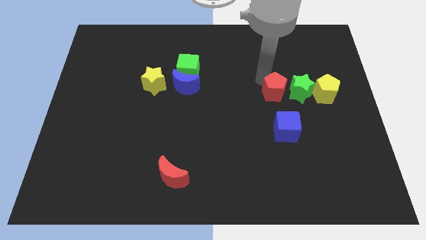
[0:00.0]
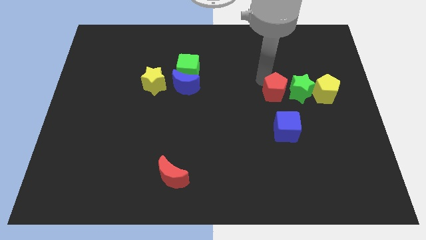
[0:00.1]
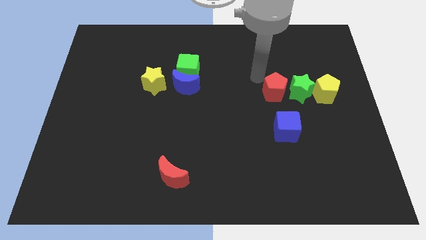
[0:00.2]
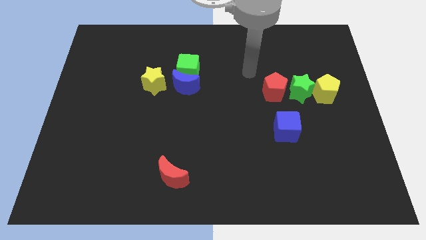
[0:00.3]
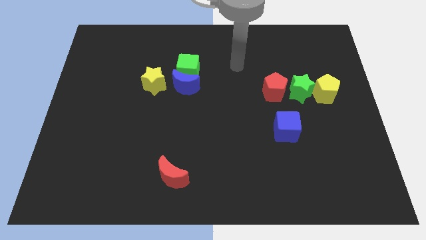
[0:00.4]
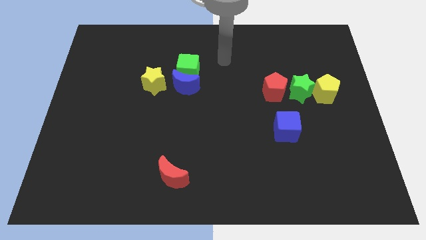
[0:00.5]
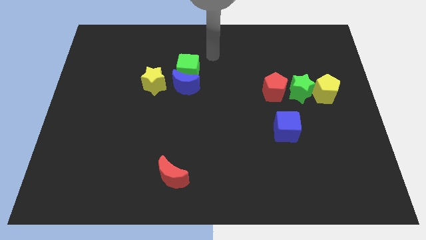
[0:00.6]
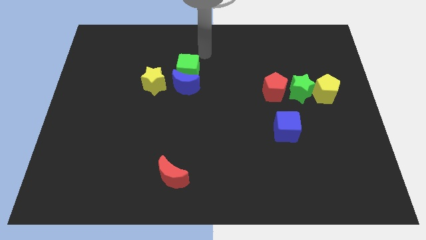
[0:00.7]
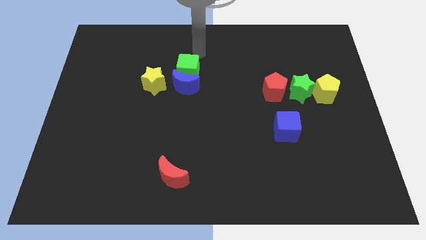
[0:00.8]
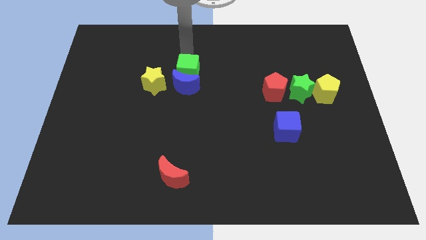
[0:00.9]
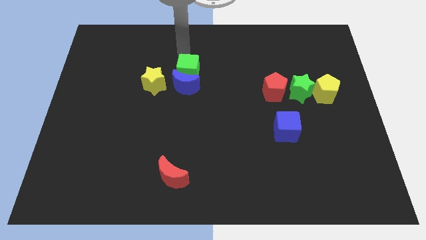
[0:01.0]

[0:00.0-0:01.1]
place arm above green cube

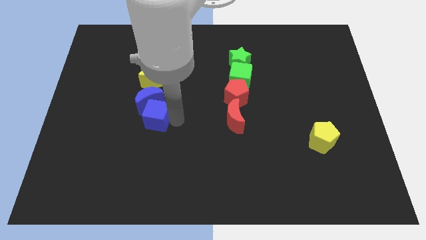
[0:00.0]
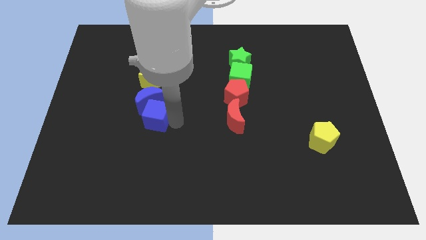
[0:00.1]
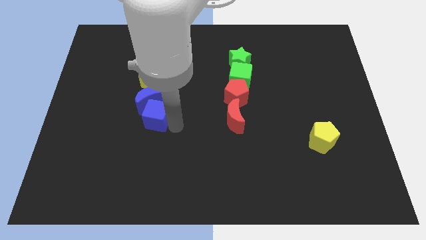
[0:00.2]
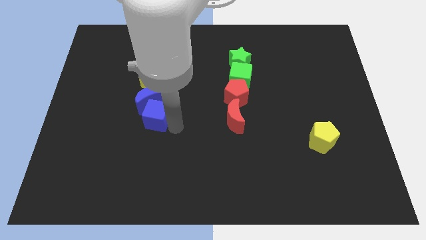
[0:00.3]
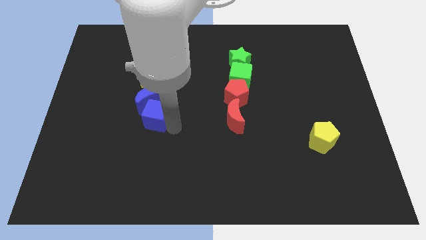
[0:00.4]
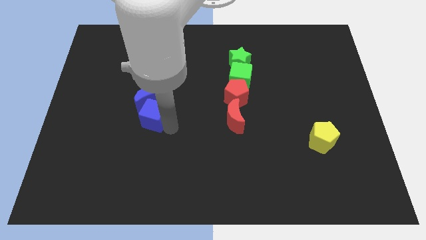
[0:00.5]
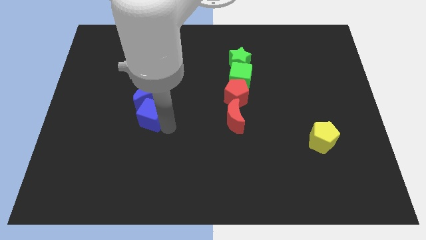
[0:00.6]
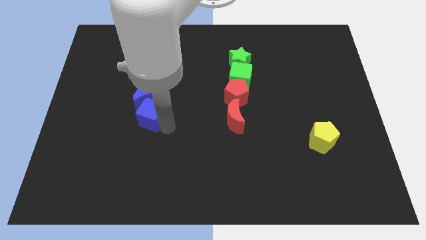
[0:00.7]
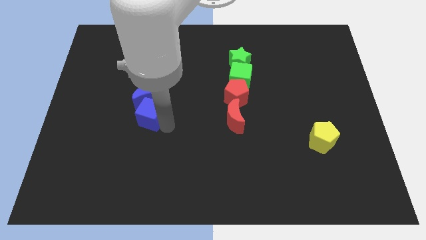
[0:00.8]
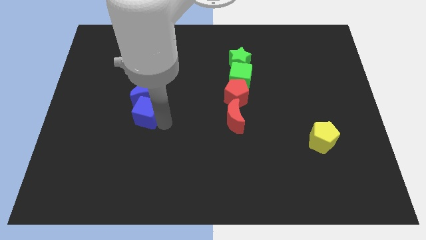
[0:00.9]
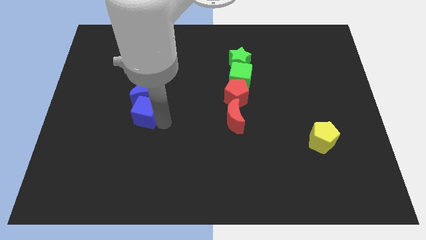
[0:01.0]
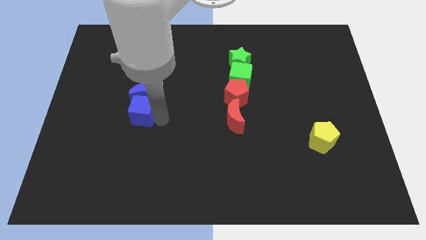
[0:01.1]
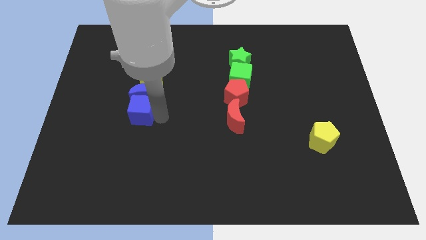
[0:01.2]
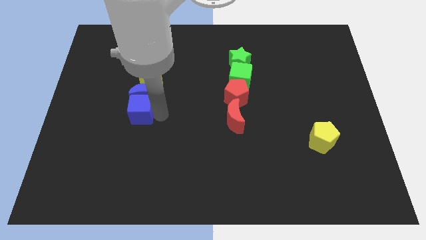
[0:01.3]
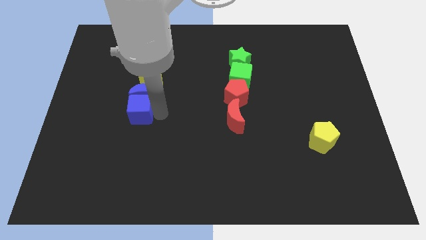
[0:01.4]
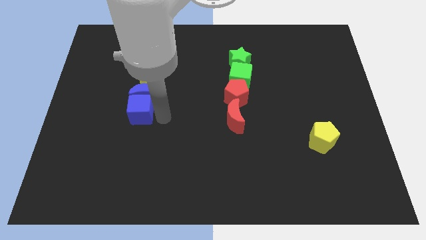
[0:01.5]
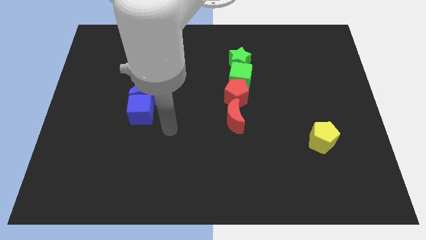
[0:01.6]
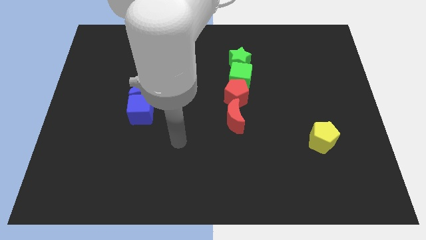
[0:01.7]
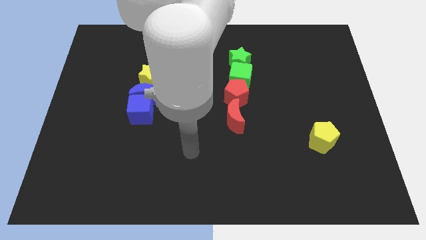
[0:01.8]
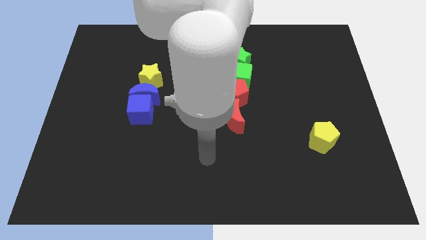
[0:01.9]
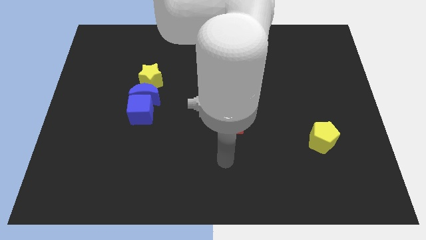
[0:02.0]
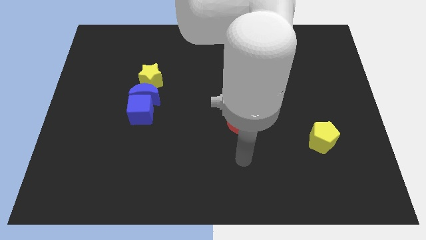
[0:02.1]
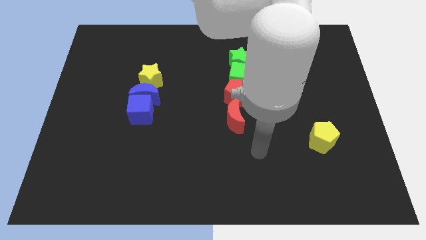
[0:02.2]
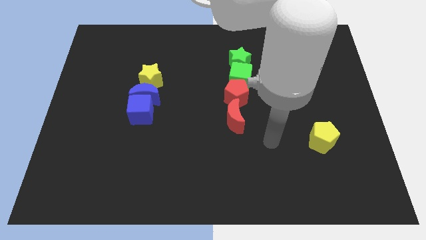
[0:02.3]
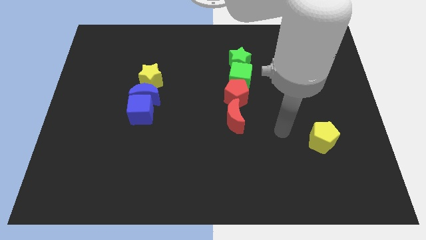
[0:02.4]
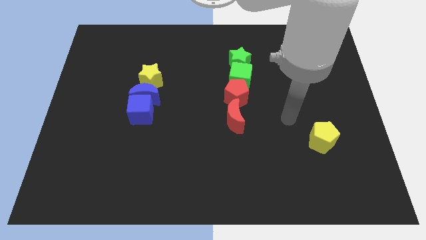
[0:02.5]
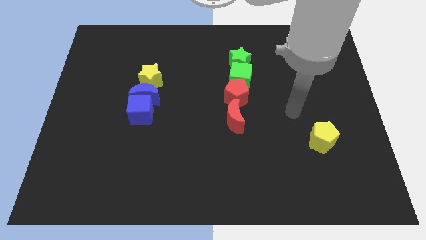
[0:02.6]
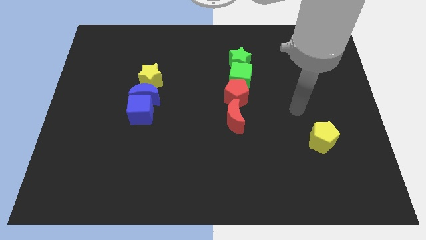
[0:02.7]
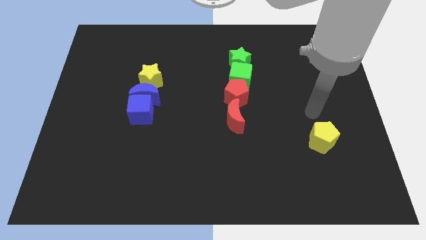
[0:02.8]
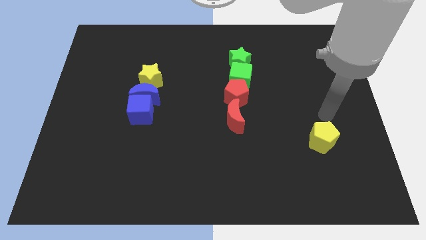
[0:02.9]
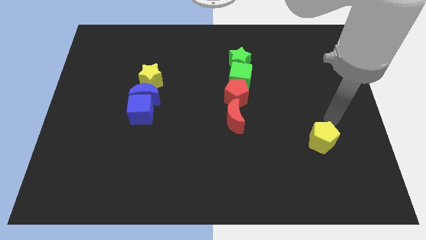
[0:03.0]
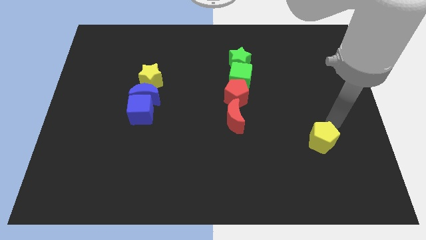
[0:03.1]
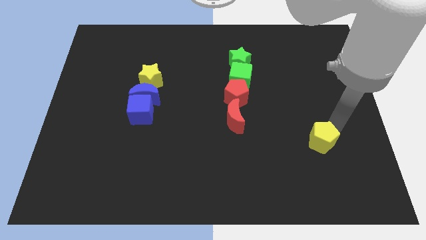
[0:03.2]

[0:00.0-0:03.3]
slide the blue cube to the bottom side of the blue crescent

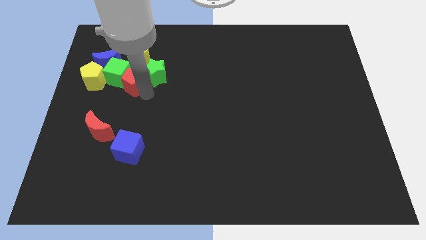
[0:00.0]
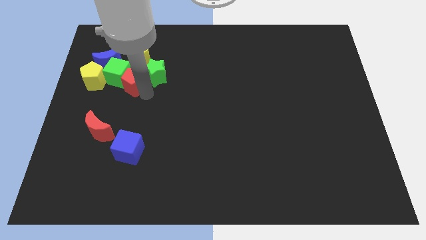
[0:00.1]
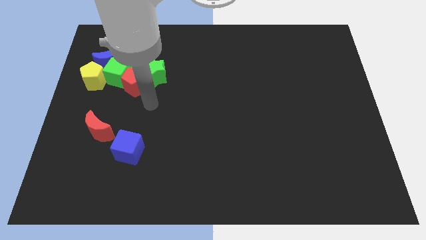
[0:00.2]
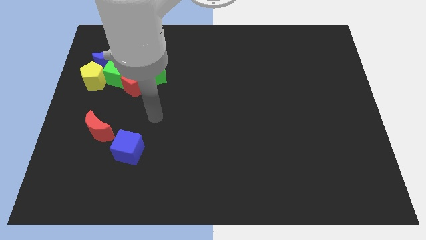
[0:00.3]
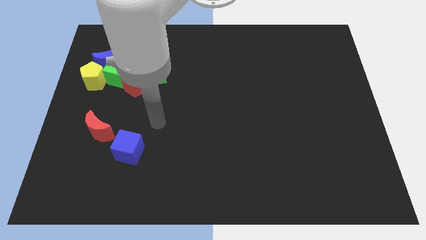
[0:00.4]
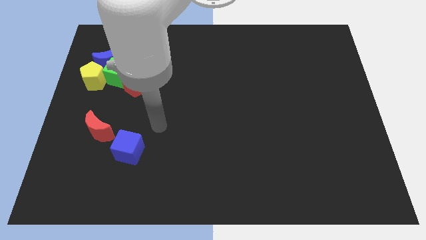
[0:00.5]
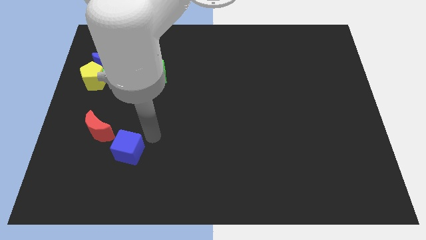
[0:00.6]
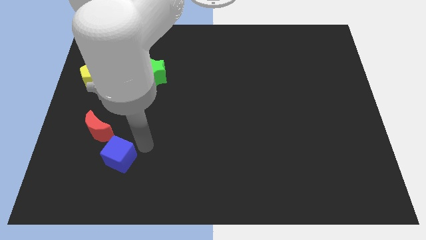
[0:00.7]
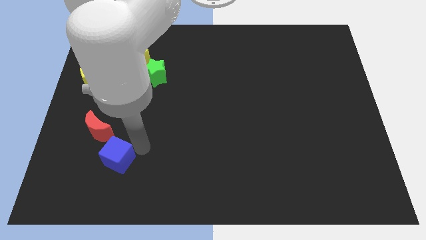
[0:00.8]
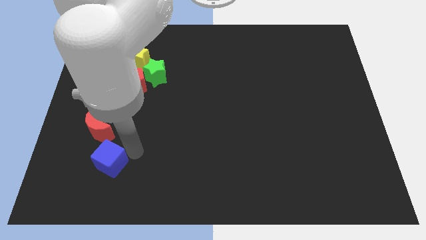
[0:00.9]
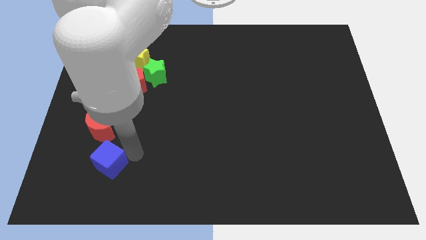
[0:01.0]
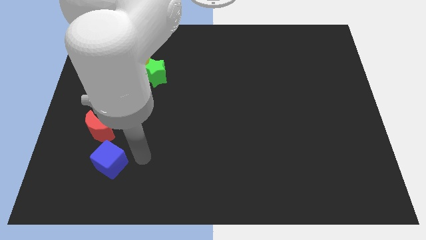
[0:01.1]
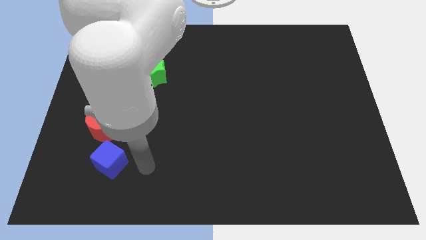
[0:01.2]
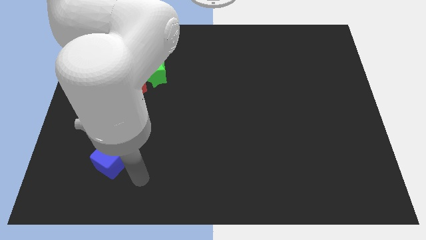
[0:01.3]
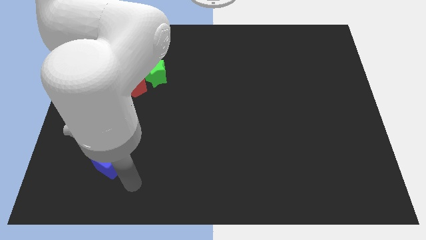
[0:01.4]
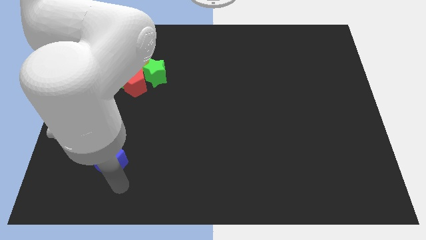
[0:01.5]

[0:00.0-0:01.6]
push the blue cube below red moon

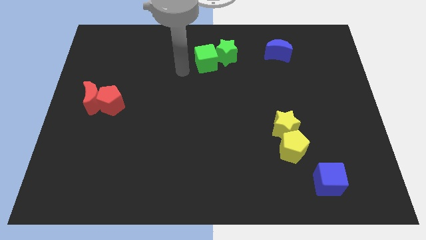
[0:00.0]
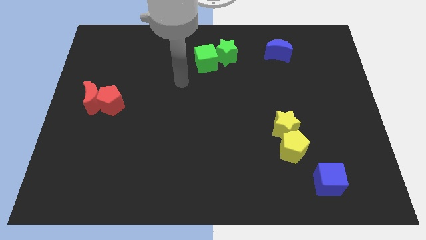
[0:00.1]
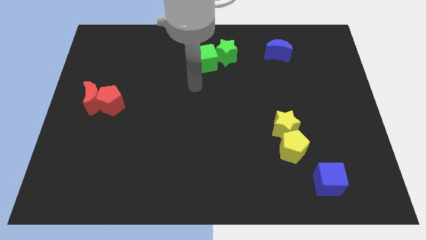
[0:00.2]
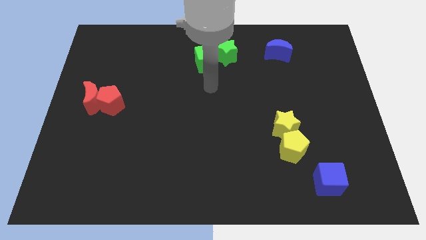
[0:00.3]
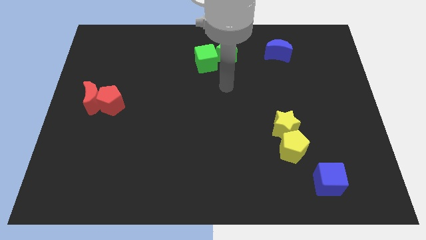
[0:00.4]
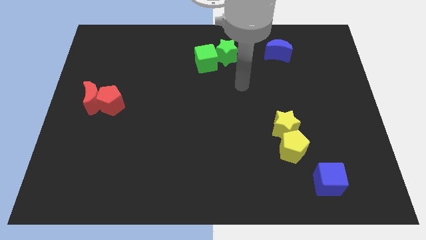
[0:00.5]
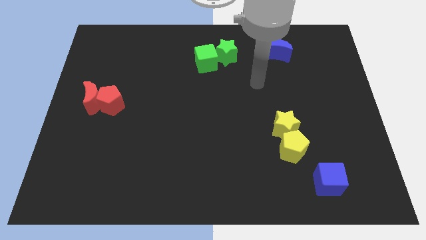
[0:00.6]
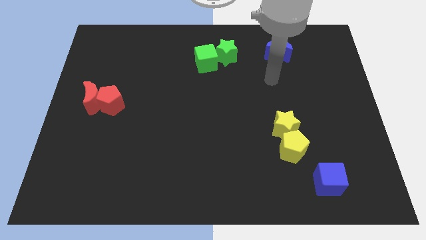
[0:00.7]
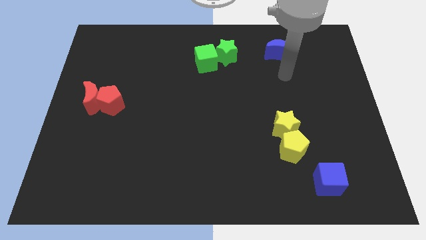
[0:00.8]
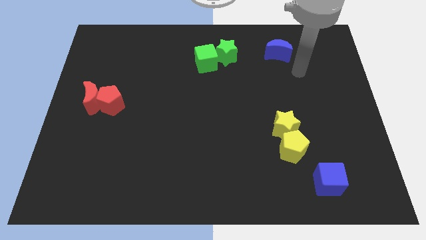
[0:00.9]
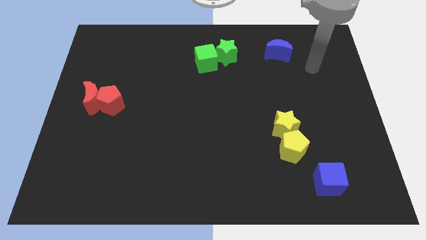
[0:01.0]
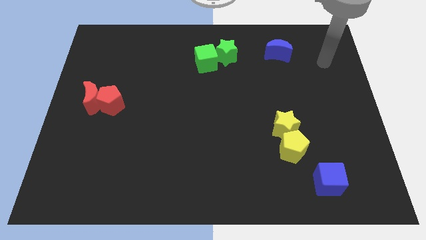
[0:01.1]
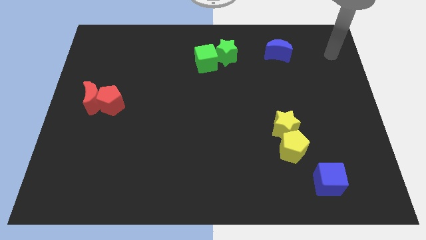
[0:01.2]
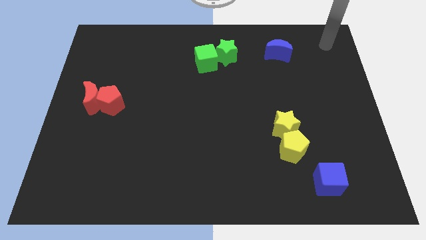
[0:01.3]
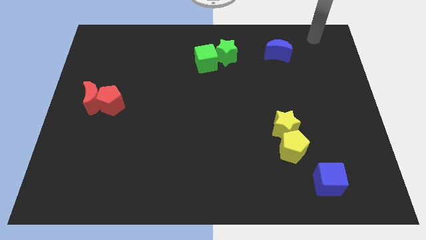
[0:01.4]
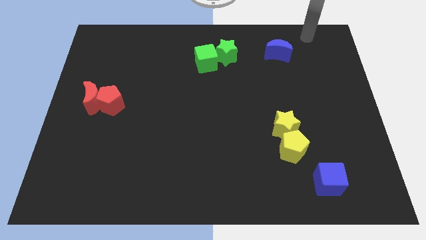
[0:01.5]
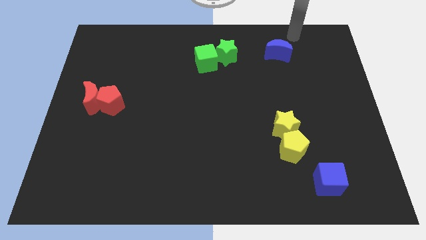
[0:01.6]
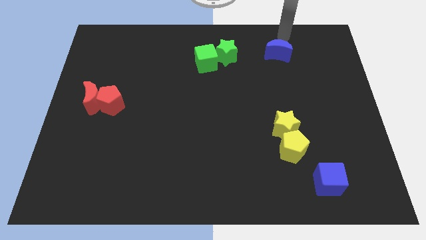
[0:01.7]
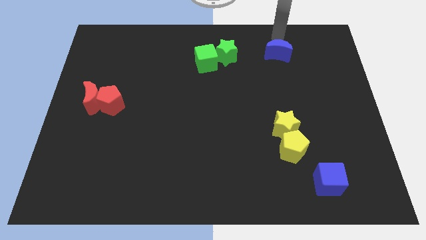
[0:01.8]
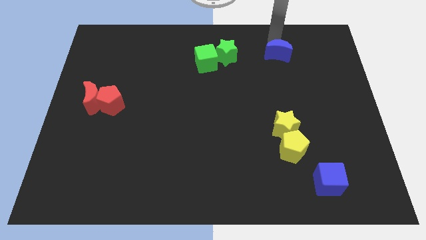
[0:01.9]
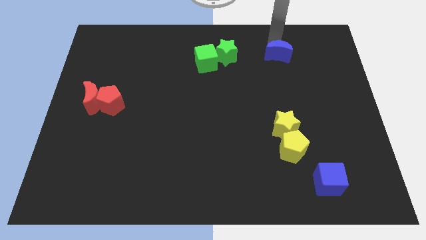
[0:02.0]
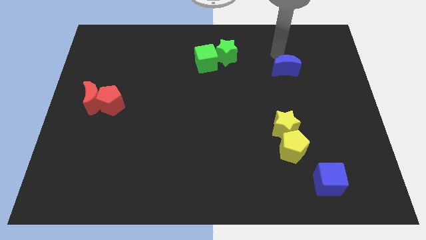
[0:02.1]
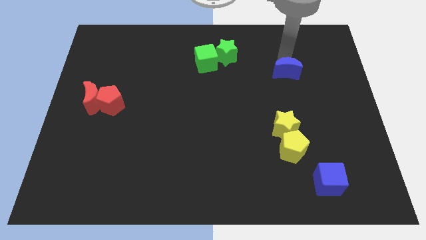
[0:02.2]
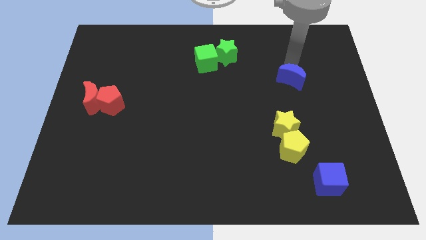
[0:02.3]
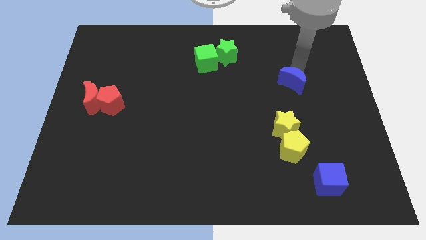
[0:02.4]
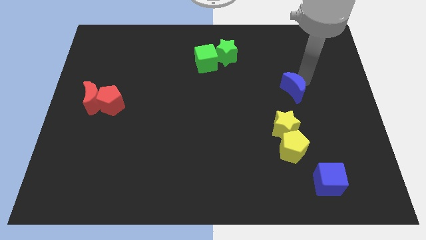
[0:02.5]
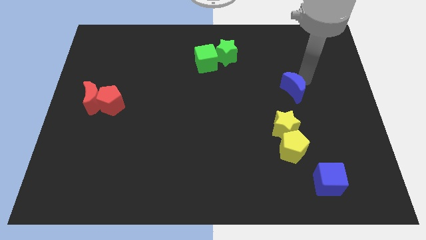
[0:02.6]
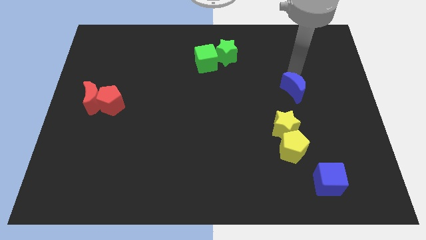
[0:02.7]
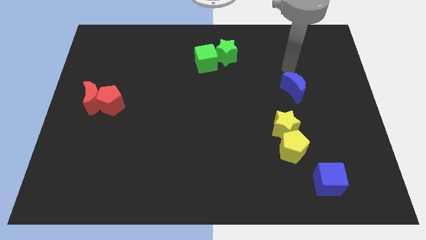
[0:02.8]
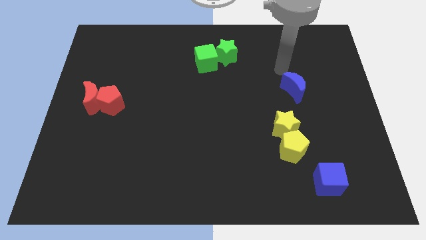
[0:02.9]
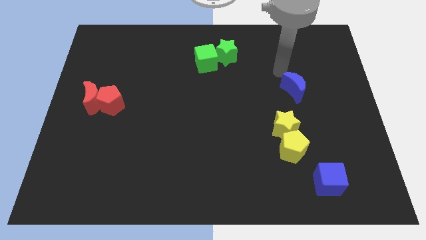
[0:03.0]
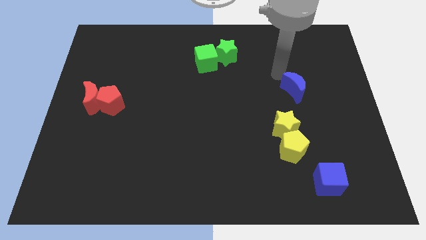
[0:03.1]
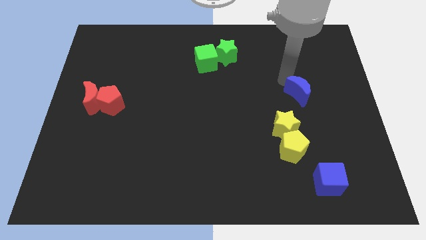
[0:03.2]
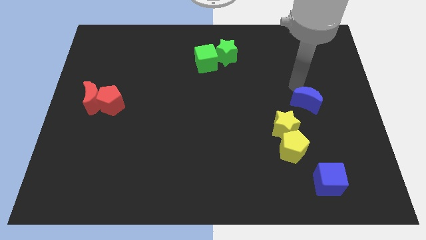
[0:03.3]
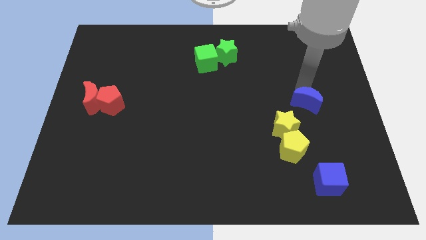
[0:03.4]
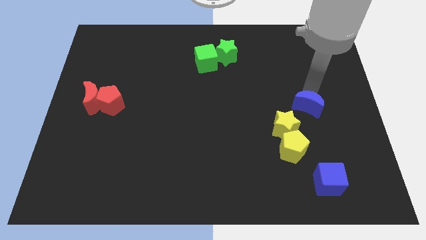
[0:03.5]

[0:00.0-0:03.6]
move the blue crescent to the bottom of the board
